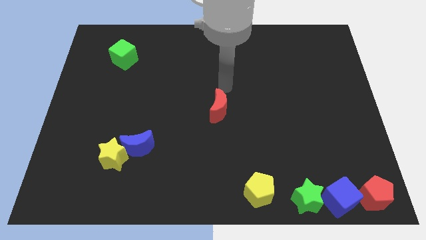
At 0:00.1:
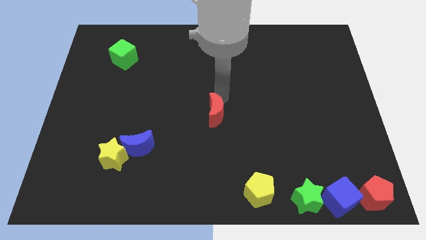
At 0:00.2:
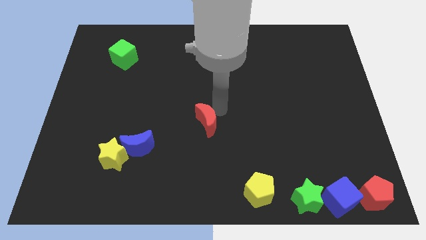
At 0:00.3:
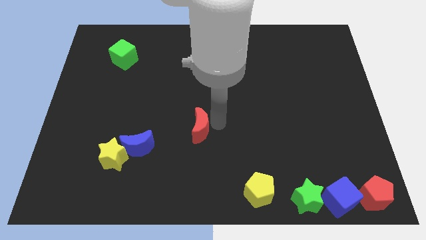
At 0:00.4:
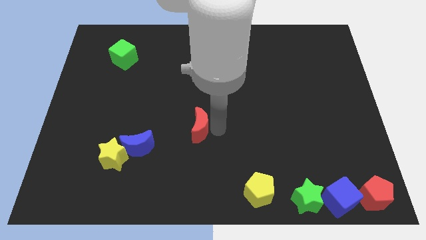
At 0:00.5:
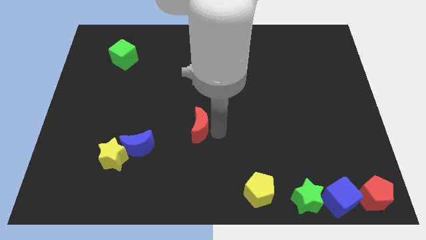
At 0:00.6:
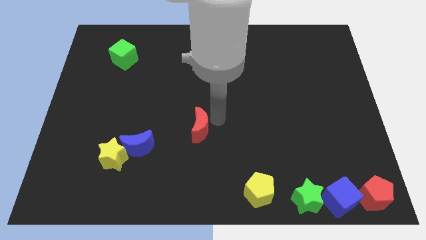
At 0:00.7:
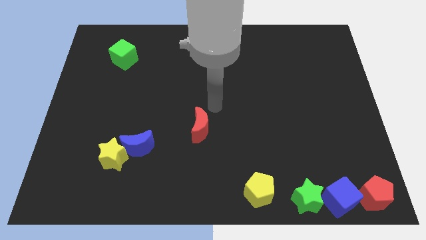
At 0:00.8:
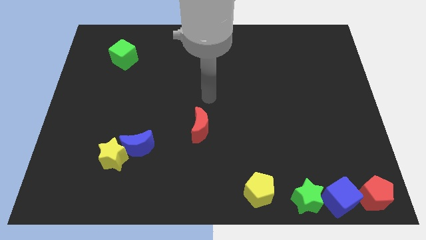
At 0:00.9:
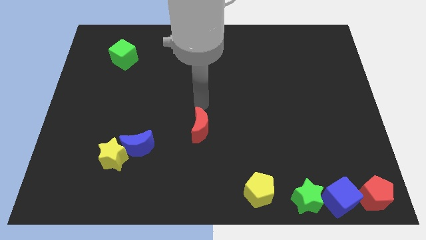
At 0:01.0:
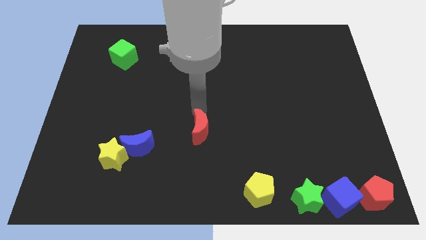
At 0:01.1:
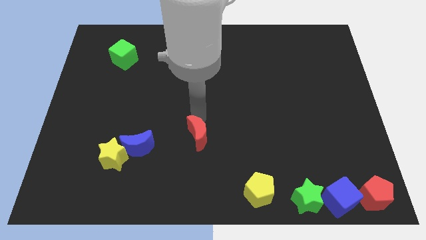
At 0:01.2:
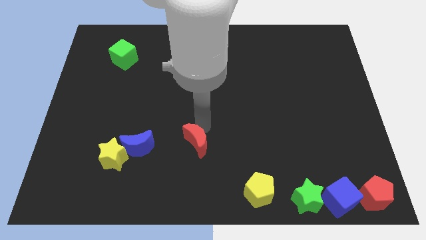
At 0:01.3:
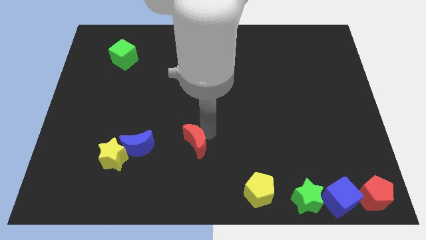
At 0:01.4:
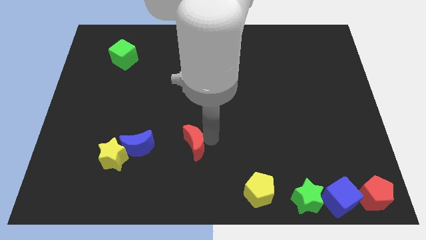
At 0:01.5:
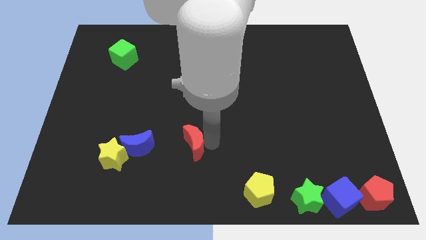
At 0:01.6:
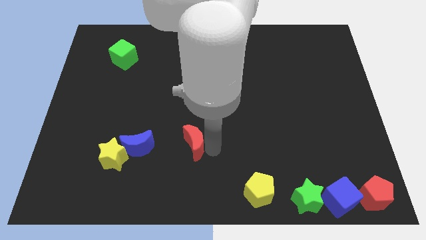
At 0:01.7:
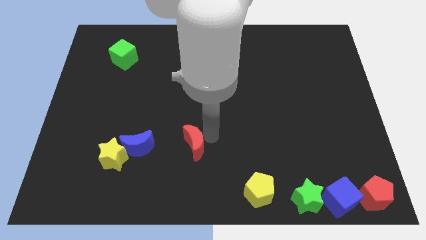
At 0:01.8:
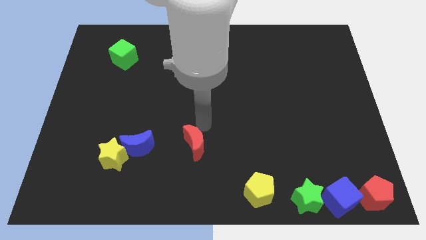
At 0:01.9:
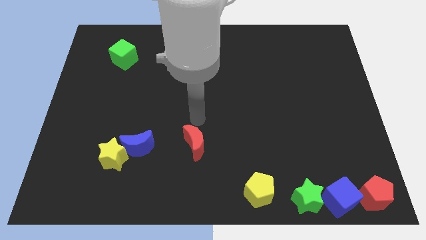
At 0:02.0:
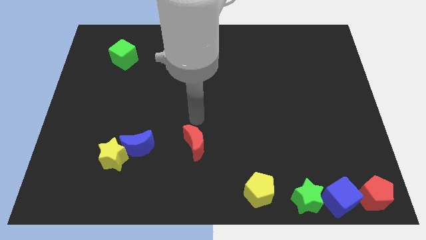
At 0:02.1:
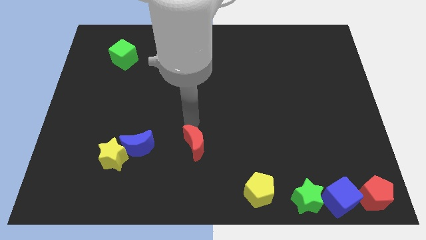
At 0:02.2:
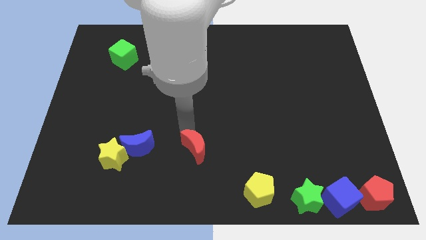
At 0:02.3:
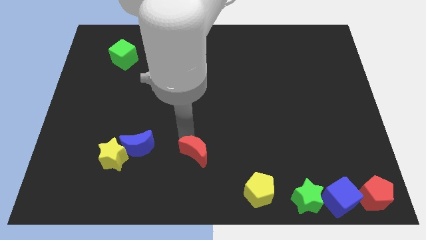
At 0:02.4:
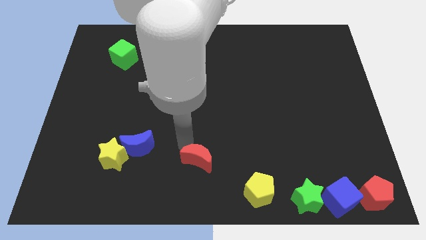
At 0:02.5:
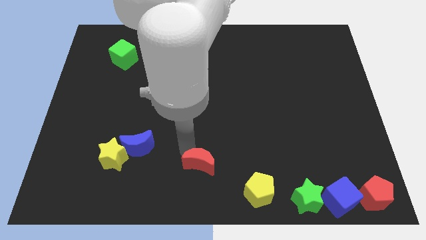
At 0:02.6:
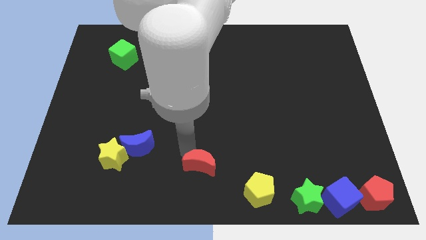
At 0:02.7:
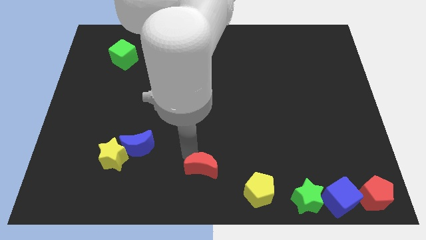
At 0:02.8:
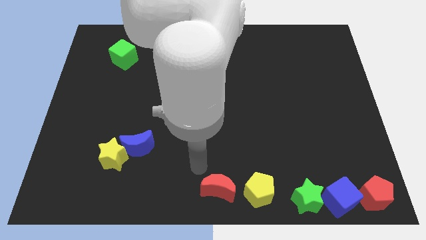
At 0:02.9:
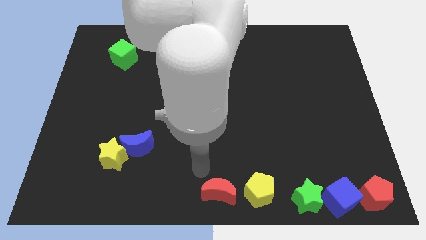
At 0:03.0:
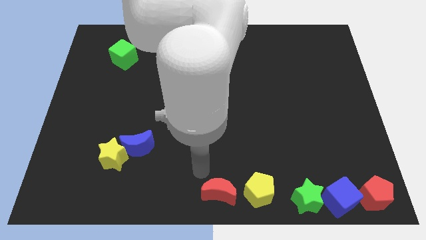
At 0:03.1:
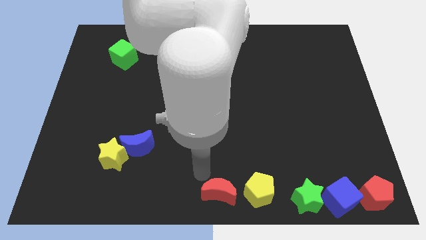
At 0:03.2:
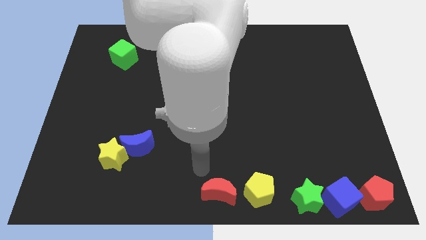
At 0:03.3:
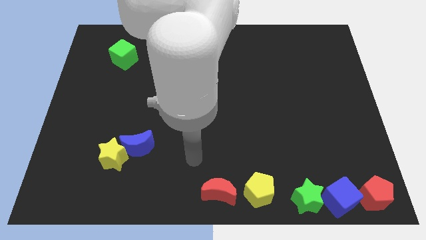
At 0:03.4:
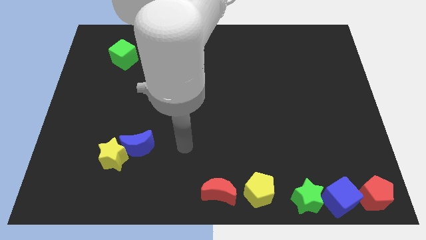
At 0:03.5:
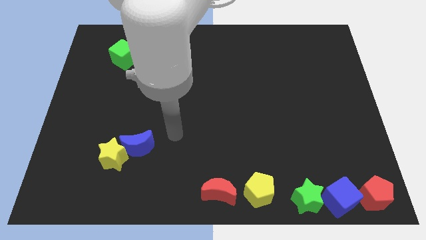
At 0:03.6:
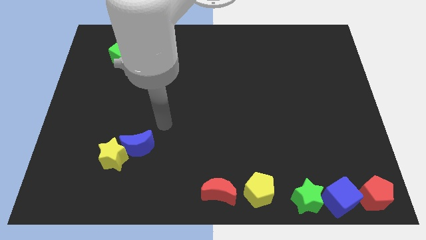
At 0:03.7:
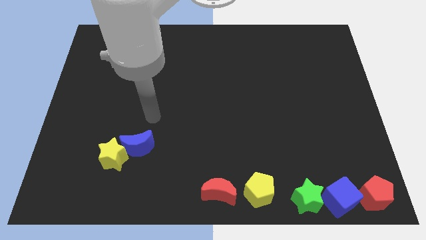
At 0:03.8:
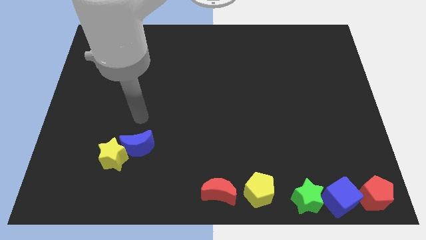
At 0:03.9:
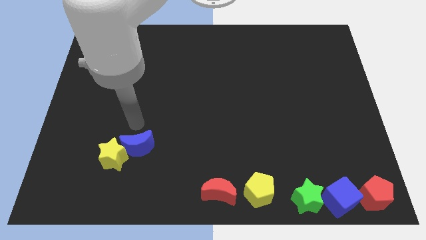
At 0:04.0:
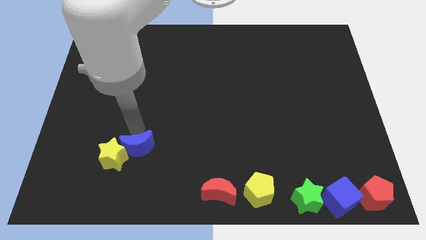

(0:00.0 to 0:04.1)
move the red crescent to the bottom left side of the yellow pentagon

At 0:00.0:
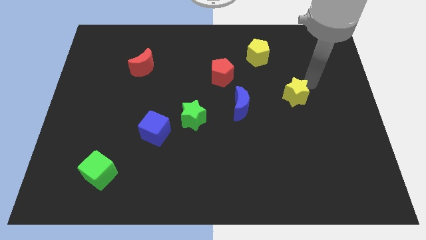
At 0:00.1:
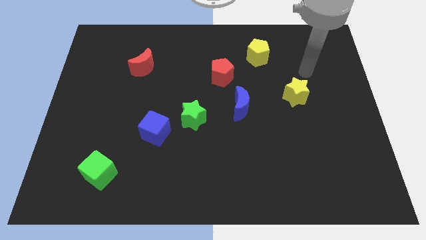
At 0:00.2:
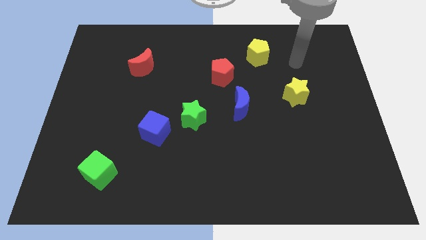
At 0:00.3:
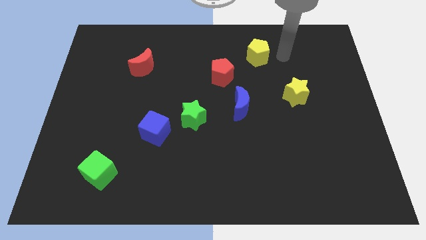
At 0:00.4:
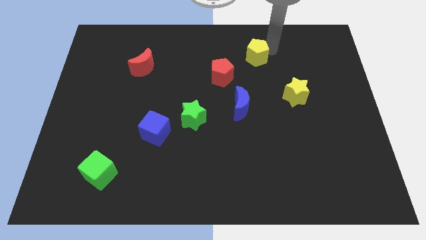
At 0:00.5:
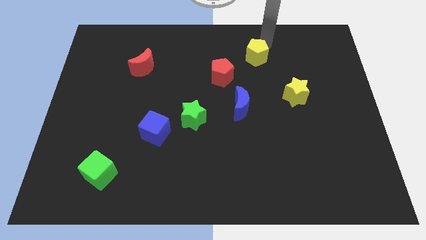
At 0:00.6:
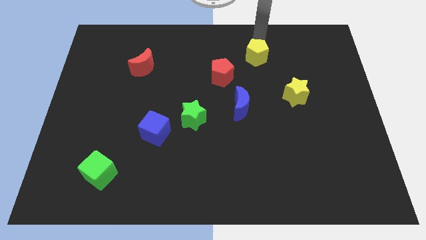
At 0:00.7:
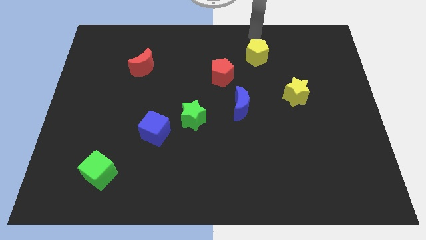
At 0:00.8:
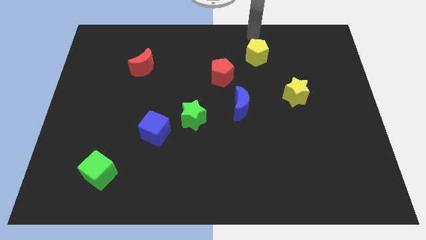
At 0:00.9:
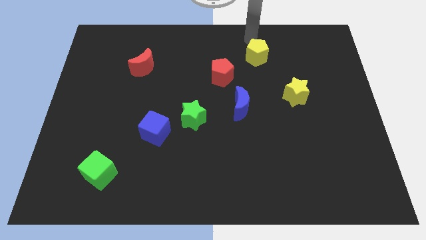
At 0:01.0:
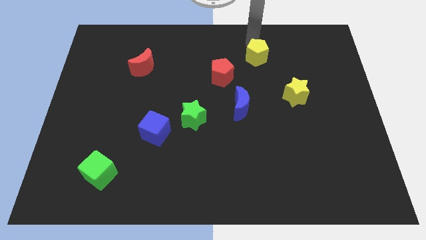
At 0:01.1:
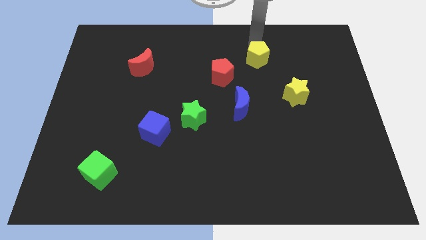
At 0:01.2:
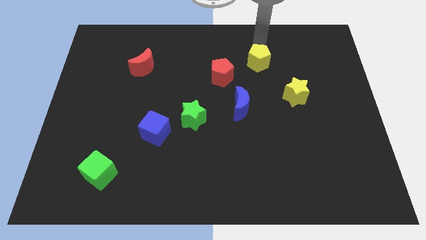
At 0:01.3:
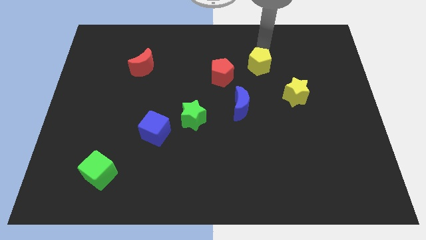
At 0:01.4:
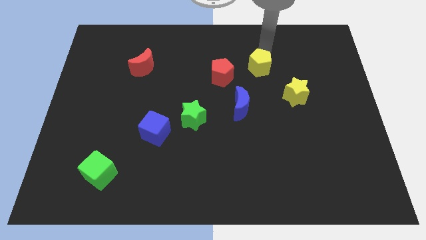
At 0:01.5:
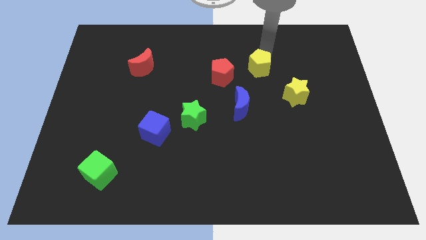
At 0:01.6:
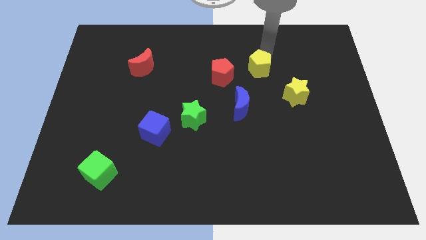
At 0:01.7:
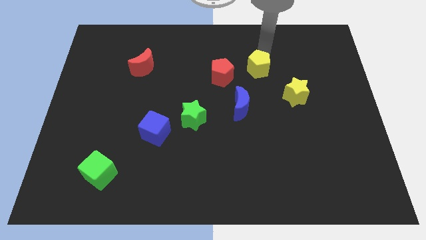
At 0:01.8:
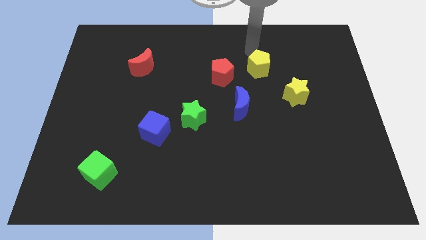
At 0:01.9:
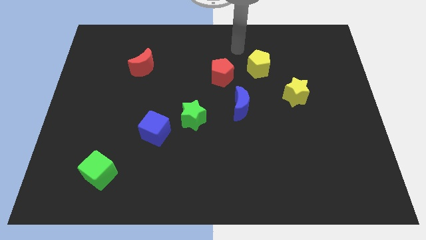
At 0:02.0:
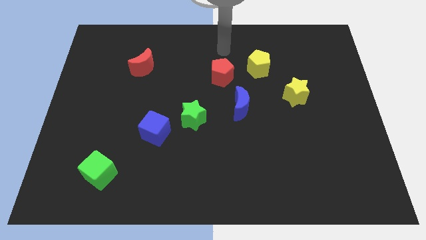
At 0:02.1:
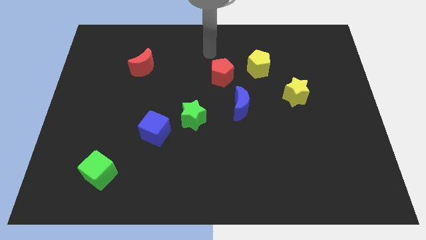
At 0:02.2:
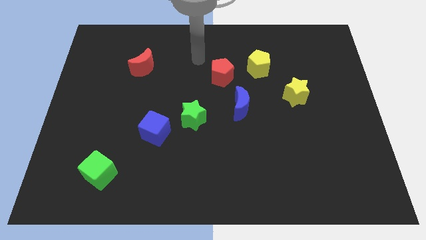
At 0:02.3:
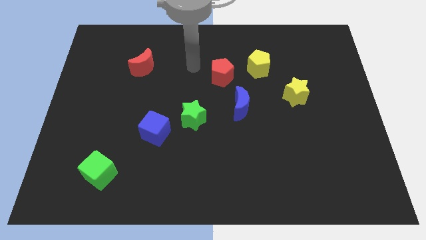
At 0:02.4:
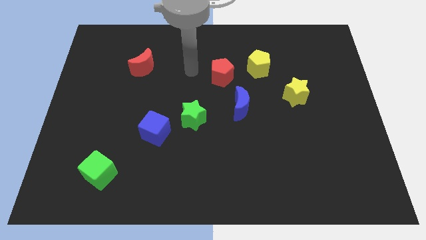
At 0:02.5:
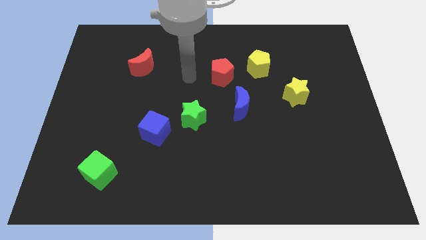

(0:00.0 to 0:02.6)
move the yellow pentagon diagonally to yellow star

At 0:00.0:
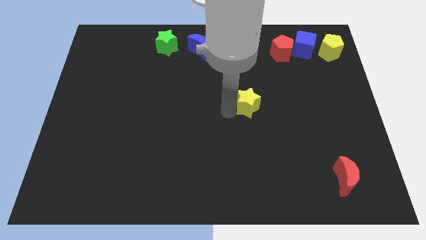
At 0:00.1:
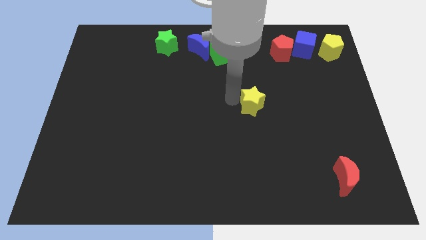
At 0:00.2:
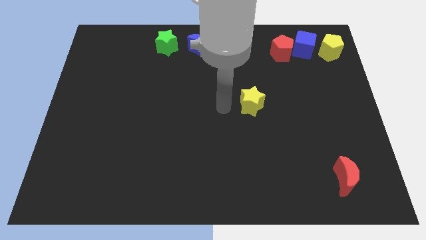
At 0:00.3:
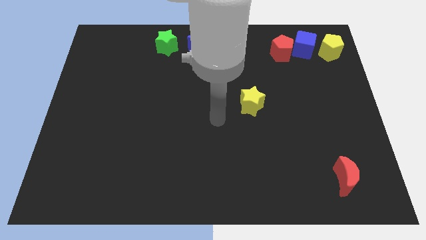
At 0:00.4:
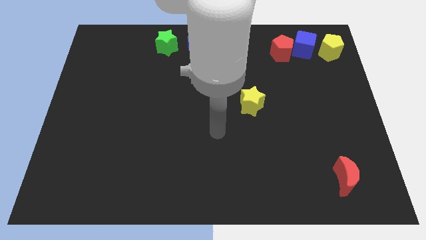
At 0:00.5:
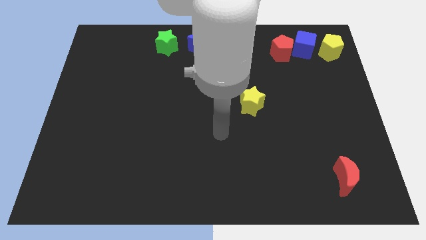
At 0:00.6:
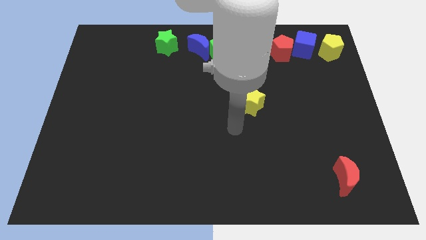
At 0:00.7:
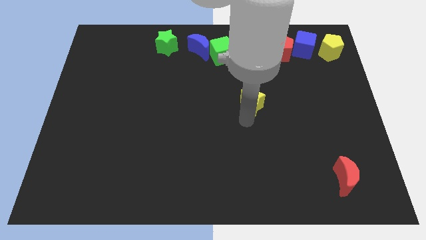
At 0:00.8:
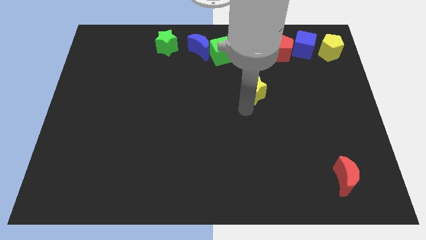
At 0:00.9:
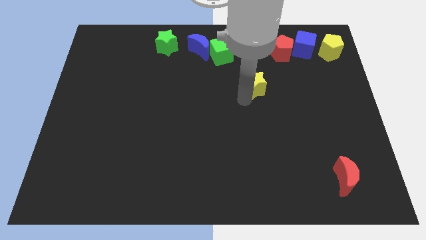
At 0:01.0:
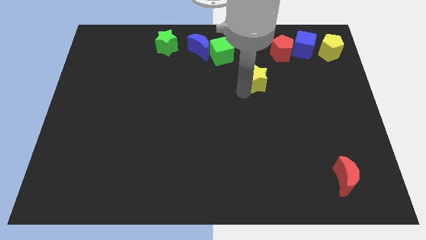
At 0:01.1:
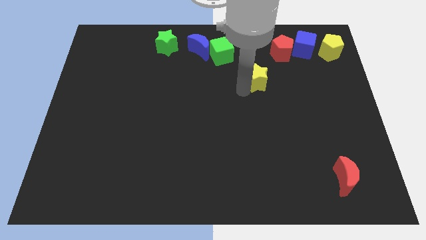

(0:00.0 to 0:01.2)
push the yellow star top right

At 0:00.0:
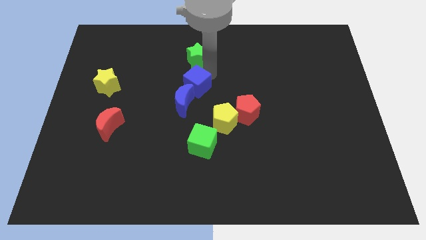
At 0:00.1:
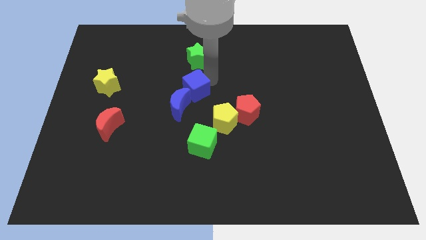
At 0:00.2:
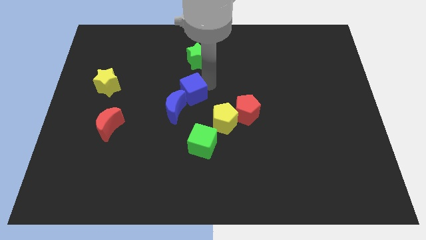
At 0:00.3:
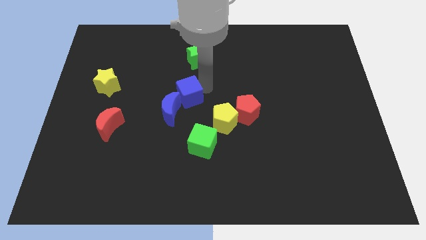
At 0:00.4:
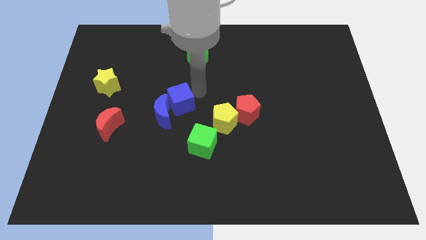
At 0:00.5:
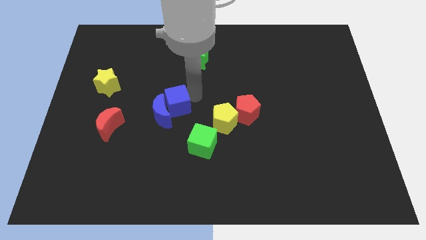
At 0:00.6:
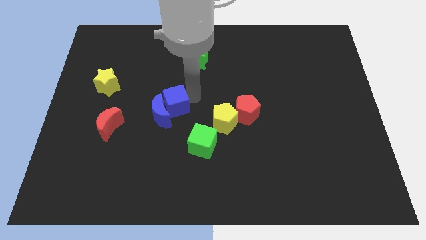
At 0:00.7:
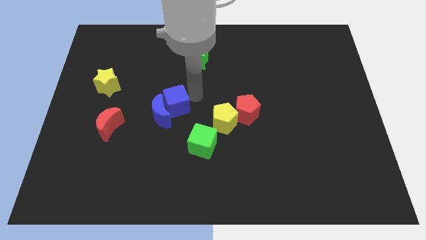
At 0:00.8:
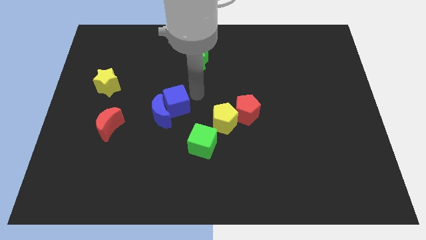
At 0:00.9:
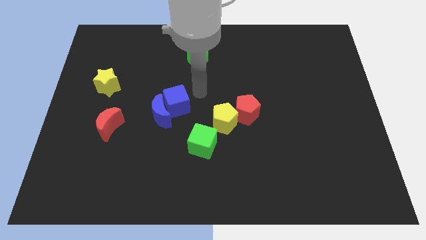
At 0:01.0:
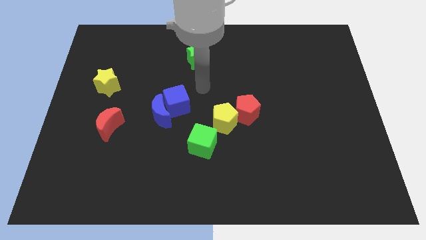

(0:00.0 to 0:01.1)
push the blue cube into the blue crescent
